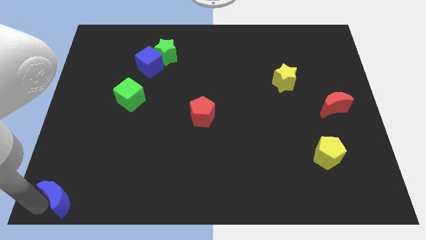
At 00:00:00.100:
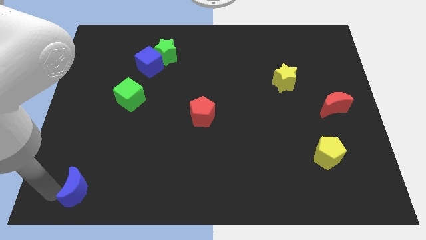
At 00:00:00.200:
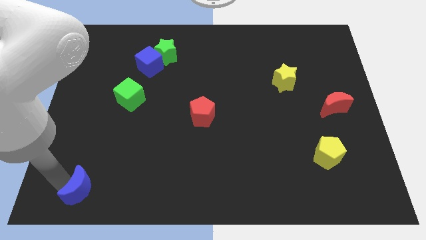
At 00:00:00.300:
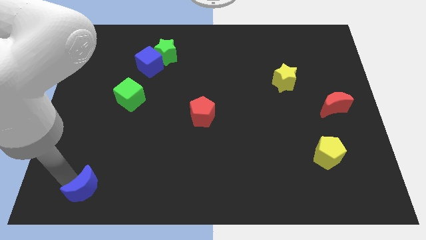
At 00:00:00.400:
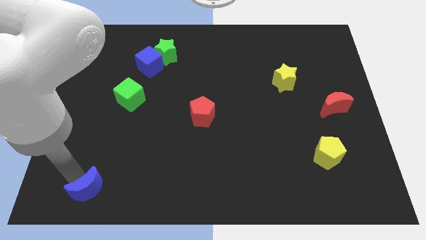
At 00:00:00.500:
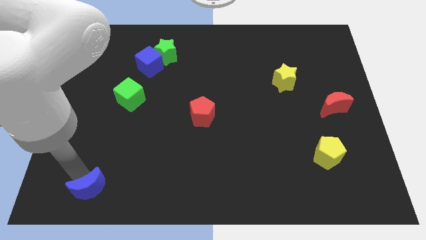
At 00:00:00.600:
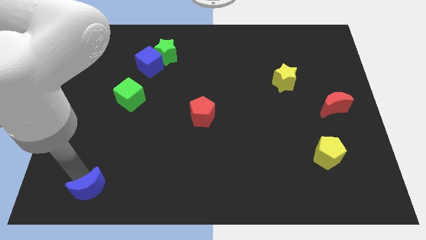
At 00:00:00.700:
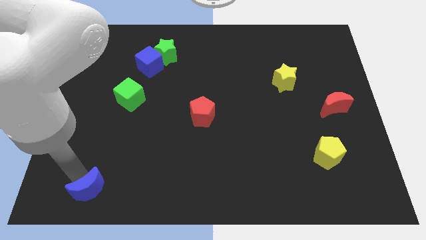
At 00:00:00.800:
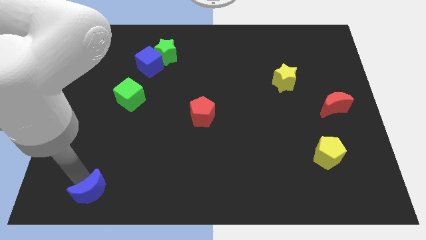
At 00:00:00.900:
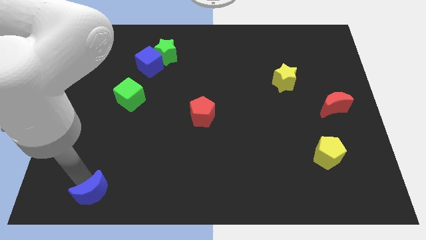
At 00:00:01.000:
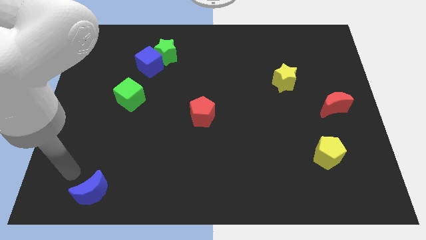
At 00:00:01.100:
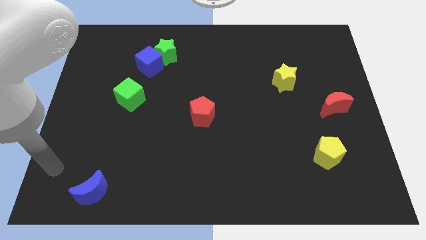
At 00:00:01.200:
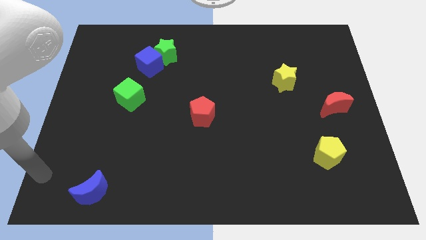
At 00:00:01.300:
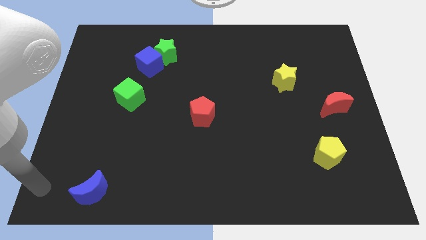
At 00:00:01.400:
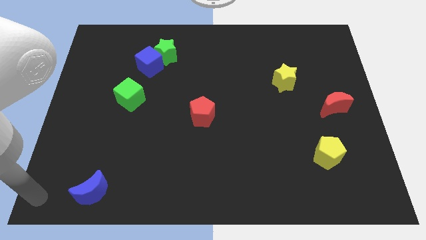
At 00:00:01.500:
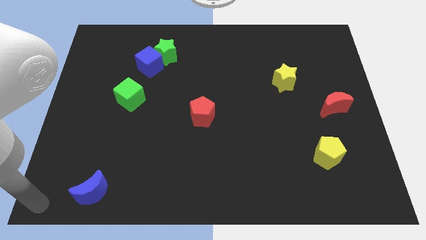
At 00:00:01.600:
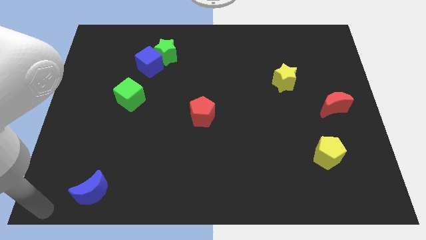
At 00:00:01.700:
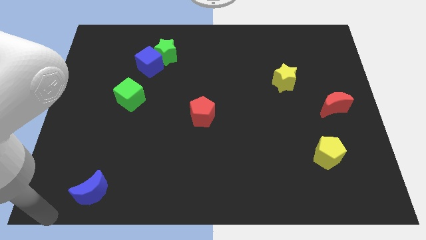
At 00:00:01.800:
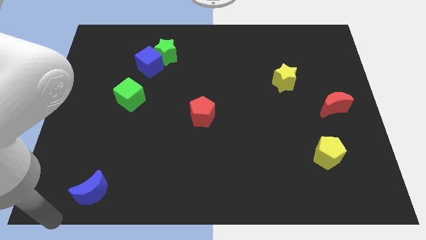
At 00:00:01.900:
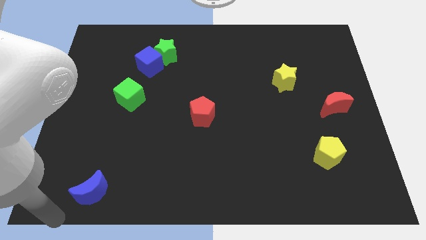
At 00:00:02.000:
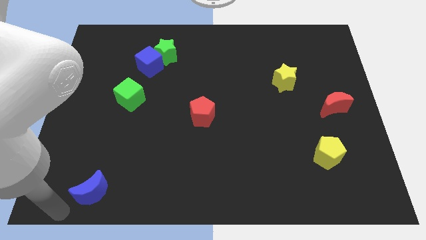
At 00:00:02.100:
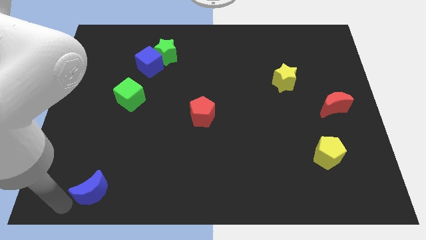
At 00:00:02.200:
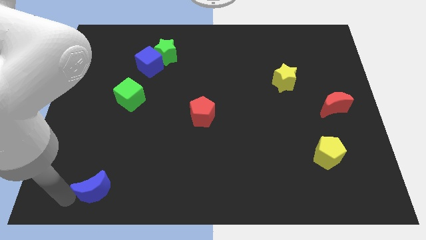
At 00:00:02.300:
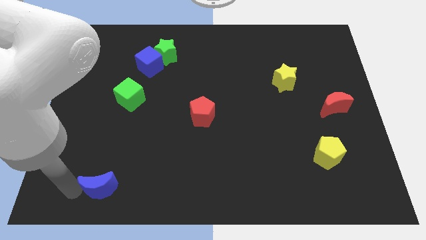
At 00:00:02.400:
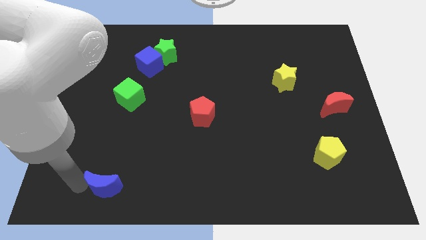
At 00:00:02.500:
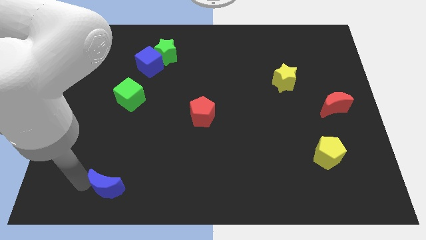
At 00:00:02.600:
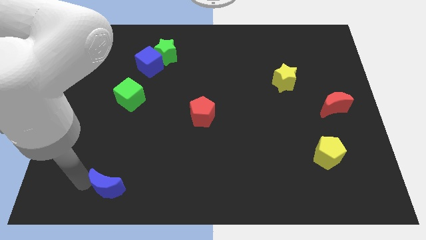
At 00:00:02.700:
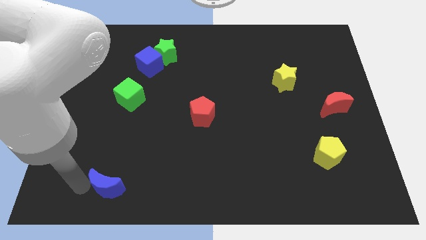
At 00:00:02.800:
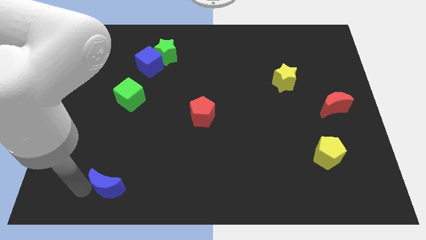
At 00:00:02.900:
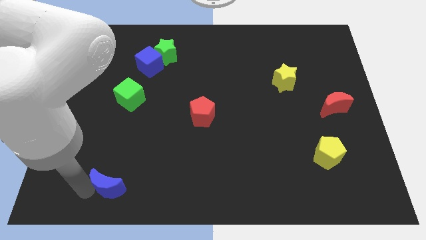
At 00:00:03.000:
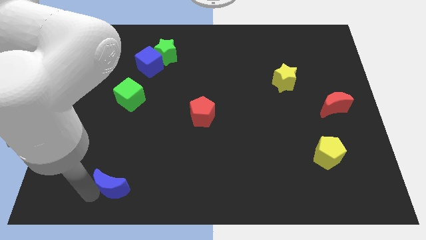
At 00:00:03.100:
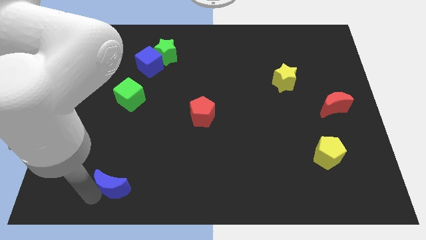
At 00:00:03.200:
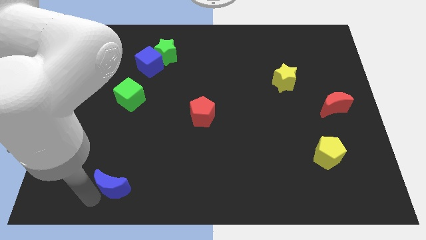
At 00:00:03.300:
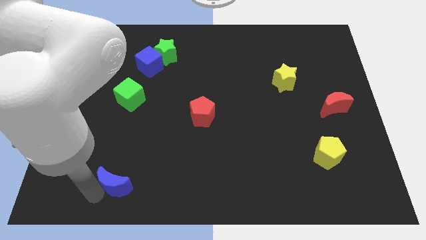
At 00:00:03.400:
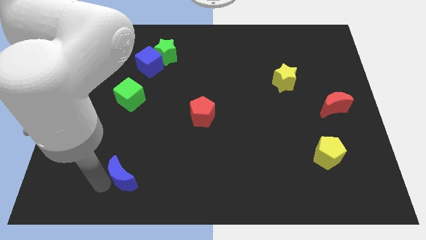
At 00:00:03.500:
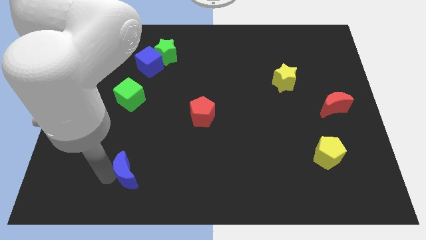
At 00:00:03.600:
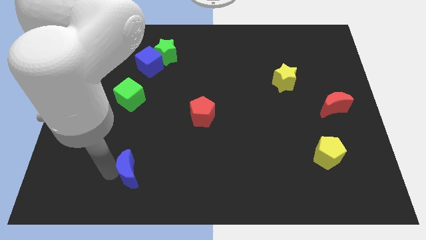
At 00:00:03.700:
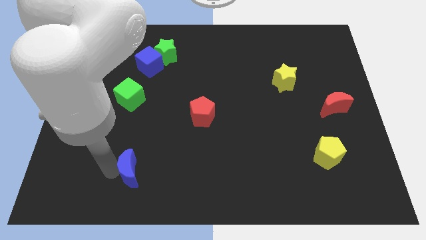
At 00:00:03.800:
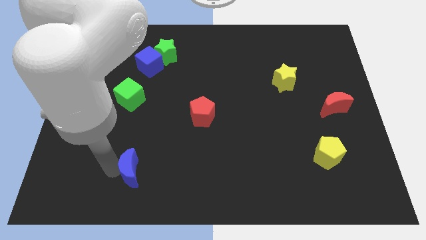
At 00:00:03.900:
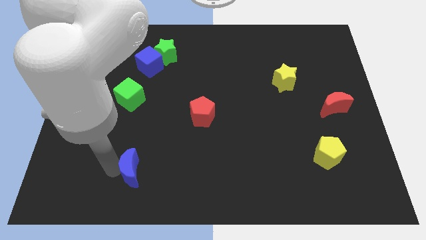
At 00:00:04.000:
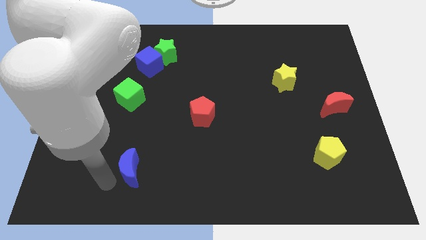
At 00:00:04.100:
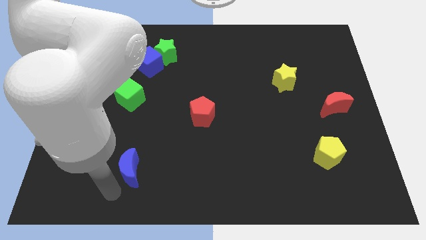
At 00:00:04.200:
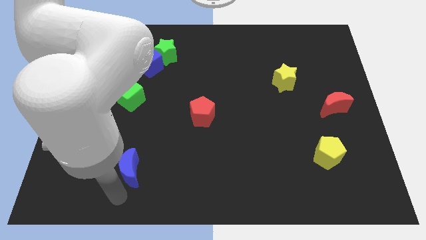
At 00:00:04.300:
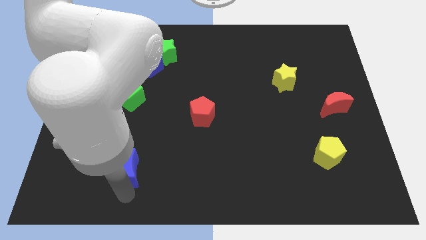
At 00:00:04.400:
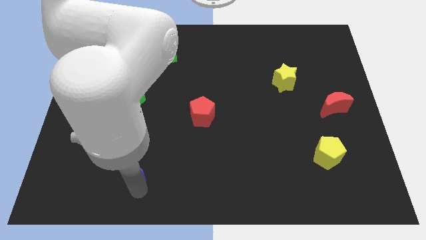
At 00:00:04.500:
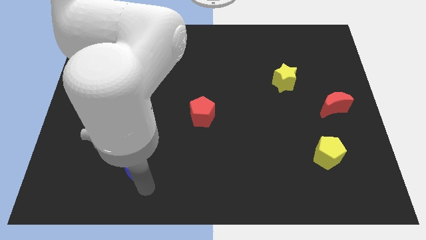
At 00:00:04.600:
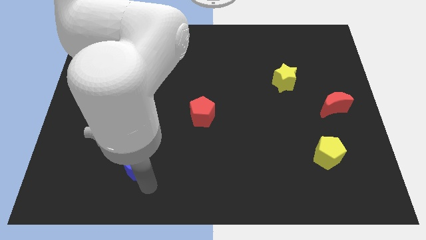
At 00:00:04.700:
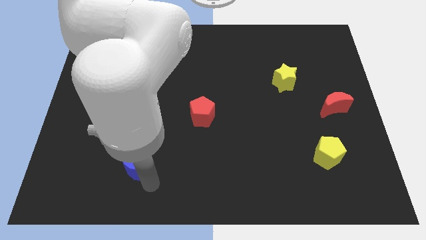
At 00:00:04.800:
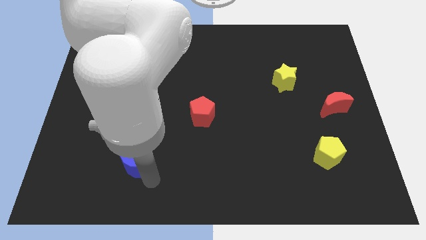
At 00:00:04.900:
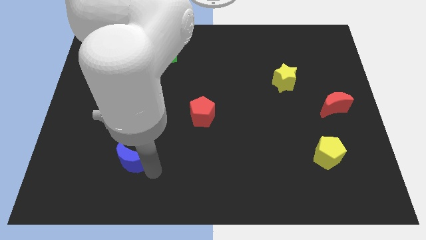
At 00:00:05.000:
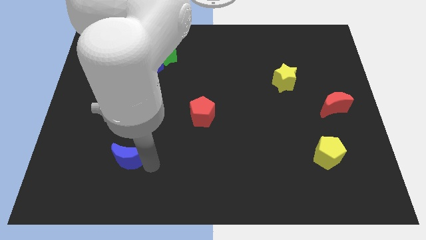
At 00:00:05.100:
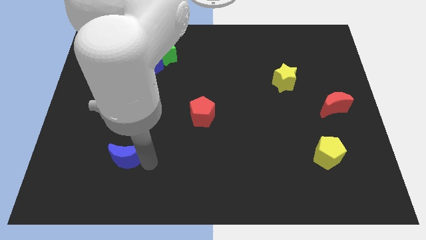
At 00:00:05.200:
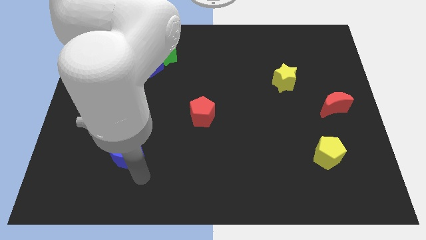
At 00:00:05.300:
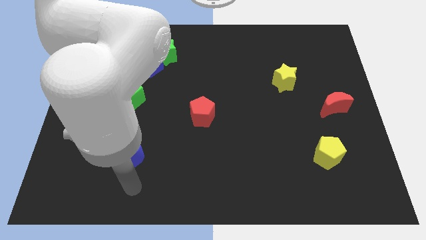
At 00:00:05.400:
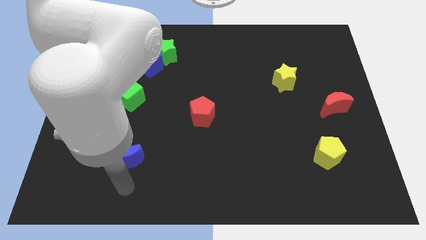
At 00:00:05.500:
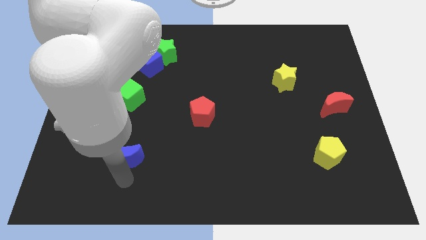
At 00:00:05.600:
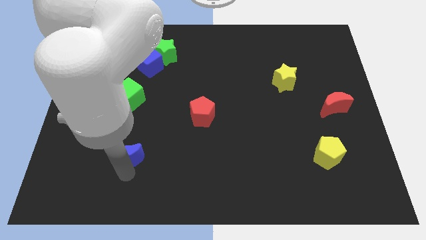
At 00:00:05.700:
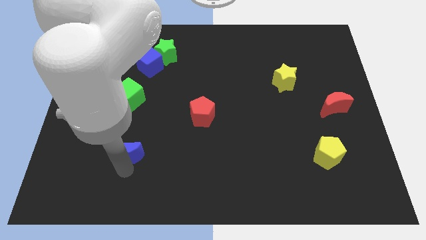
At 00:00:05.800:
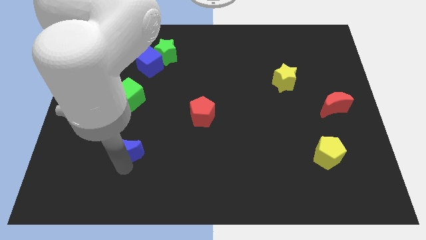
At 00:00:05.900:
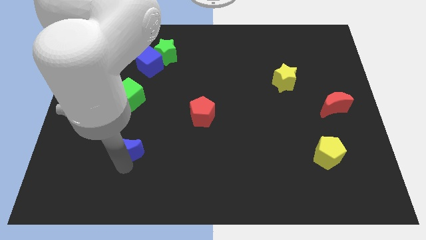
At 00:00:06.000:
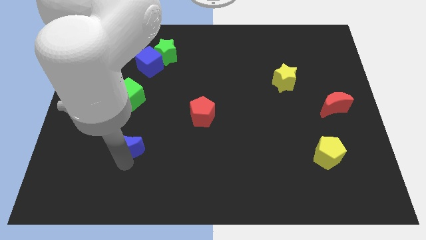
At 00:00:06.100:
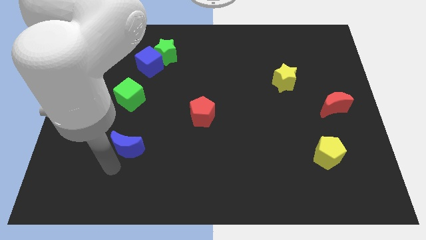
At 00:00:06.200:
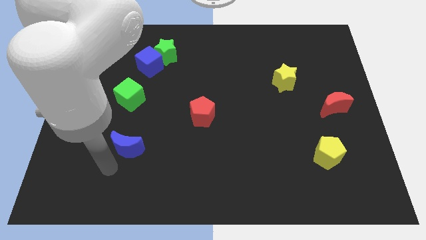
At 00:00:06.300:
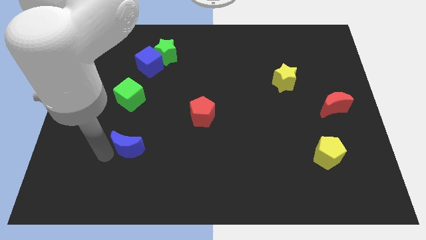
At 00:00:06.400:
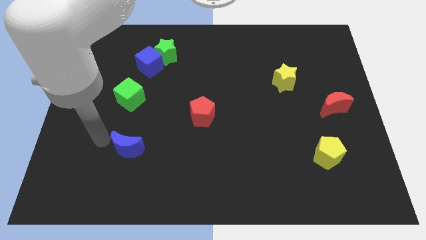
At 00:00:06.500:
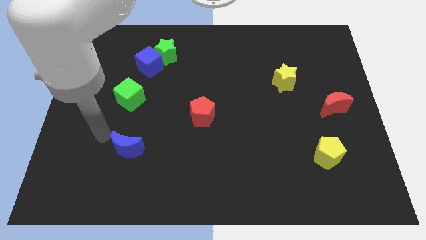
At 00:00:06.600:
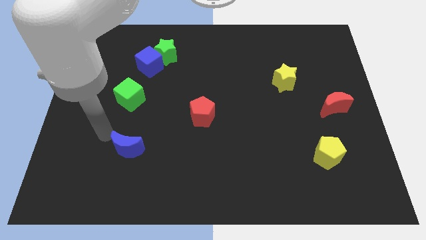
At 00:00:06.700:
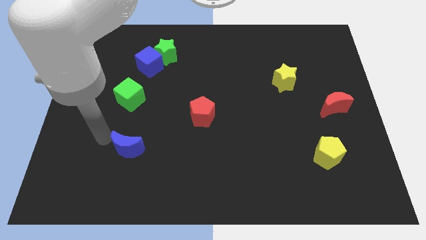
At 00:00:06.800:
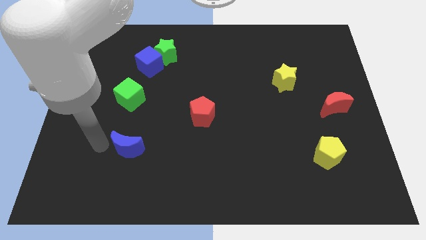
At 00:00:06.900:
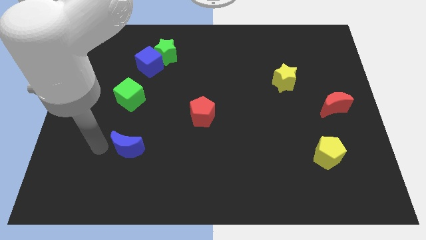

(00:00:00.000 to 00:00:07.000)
push the blue crescent towards the green cube

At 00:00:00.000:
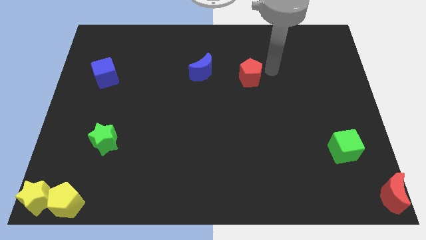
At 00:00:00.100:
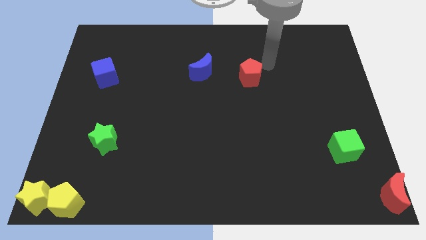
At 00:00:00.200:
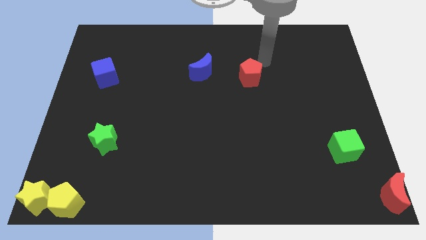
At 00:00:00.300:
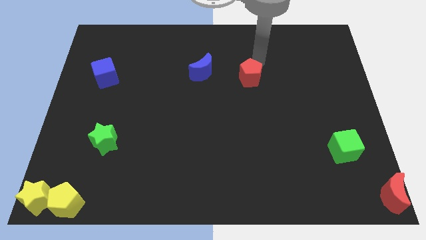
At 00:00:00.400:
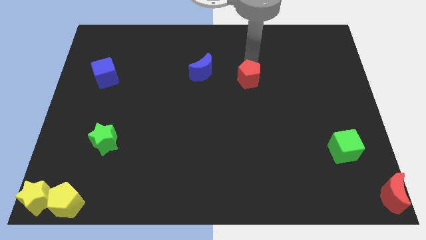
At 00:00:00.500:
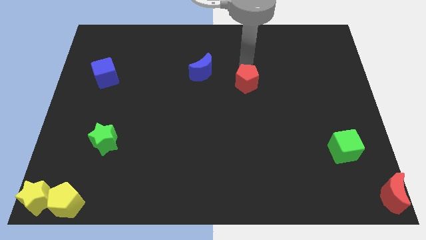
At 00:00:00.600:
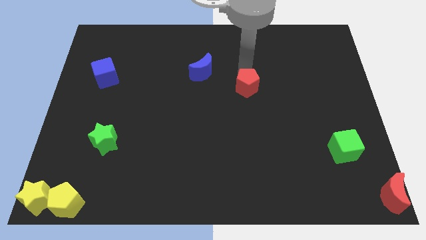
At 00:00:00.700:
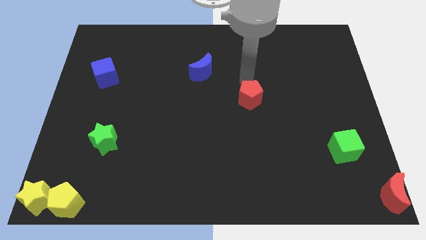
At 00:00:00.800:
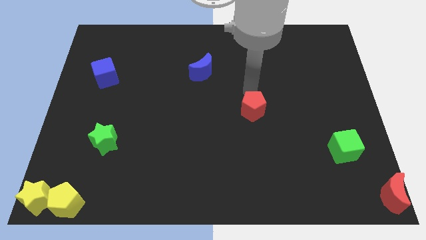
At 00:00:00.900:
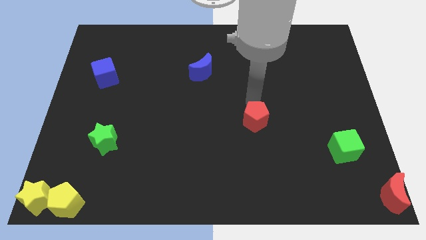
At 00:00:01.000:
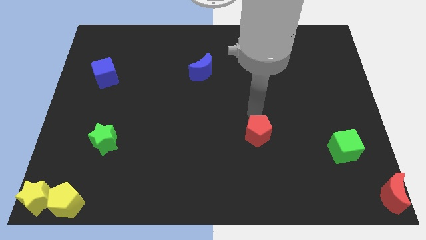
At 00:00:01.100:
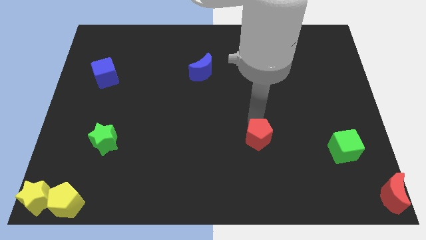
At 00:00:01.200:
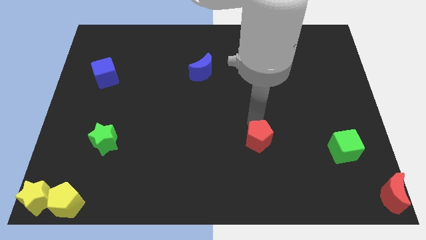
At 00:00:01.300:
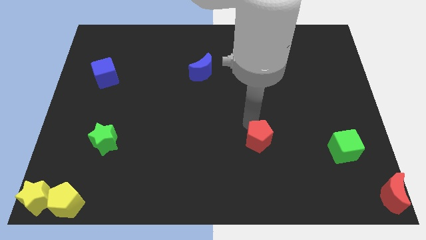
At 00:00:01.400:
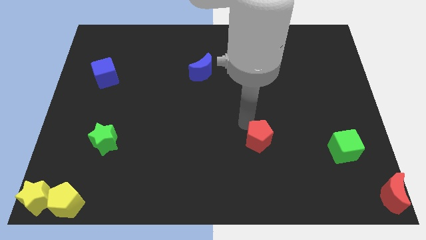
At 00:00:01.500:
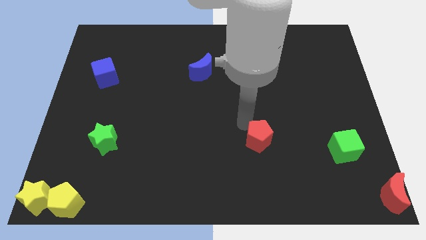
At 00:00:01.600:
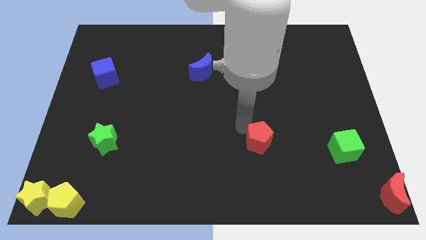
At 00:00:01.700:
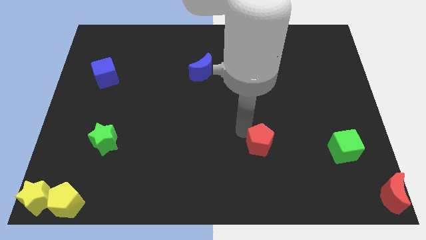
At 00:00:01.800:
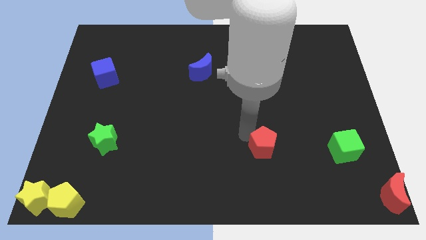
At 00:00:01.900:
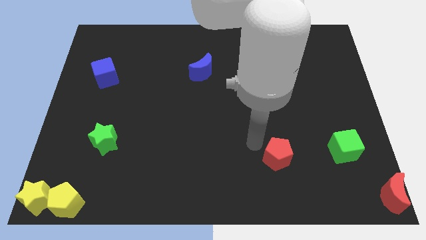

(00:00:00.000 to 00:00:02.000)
place the red pentagon in between green star and green cube
